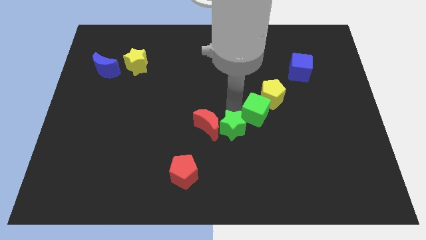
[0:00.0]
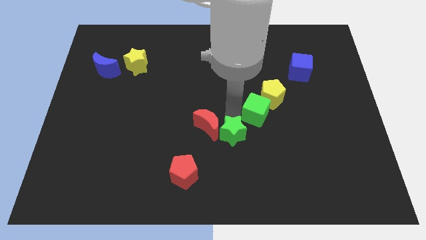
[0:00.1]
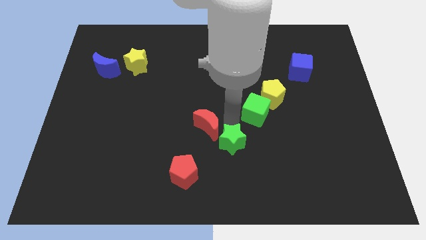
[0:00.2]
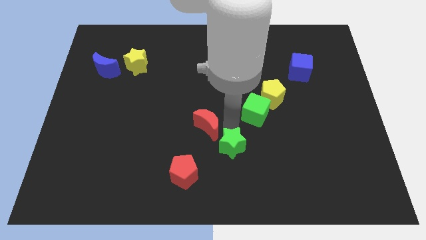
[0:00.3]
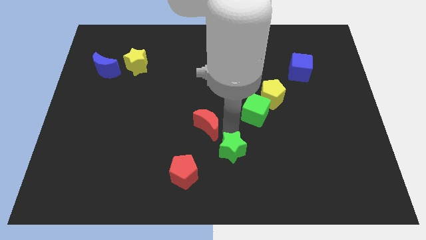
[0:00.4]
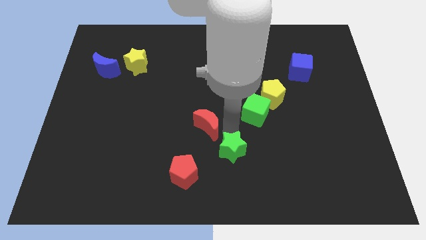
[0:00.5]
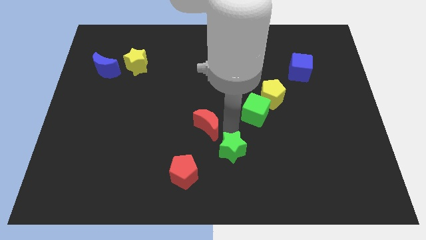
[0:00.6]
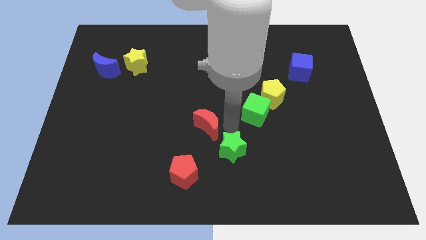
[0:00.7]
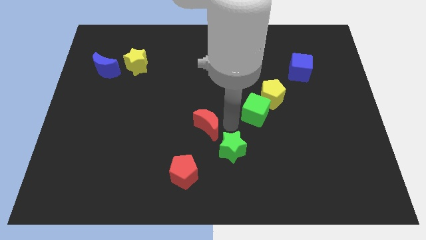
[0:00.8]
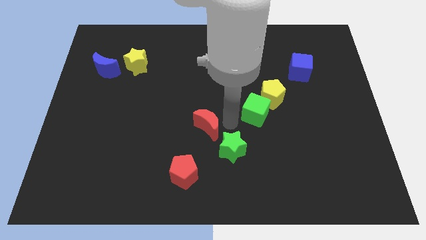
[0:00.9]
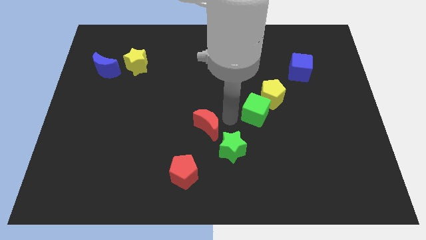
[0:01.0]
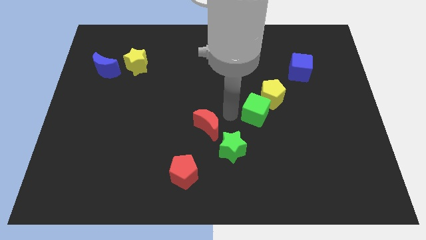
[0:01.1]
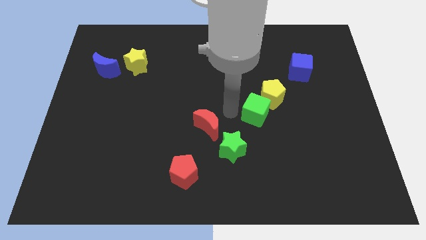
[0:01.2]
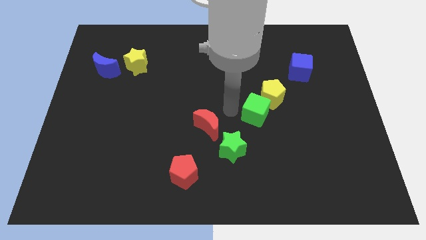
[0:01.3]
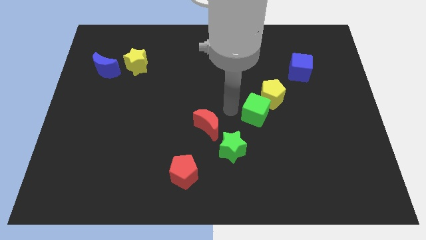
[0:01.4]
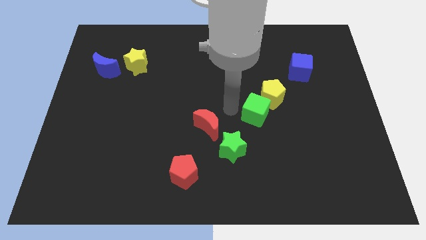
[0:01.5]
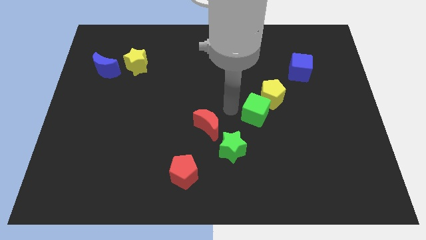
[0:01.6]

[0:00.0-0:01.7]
place the green star below the red moon

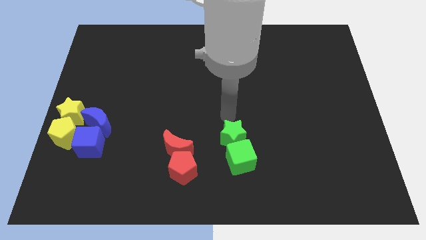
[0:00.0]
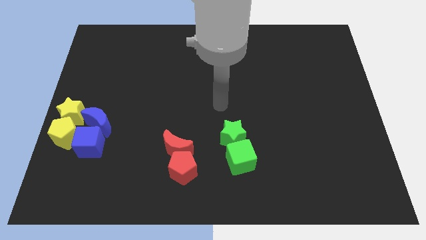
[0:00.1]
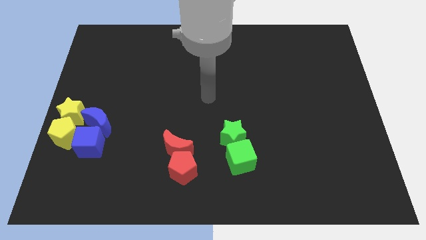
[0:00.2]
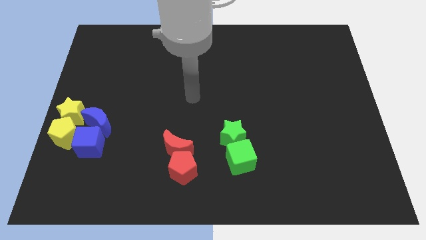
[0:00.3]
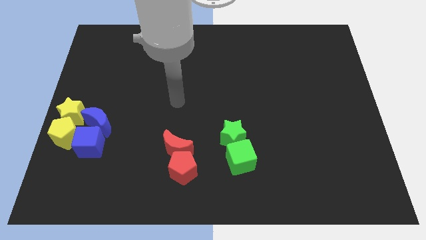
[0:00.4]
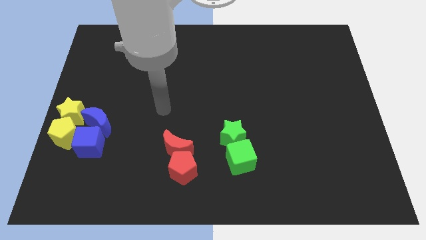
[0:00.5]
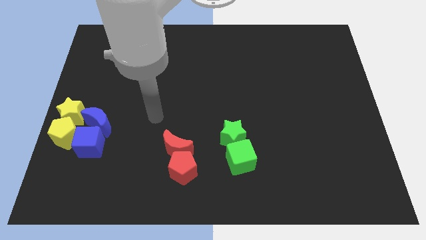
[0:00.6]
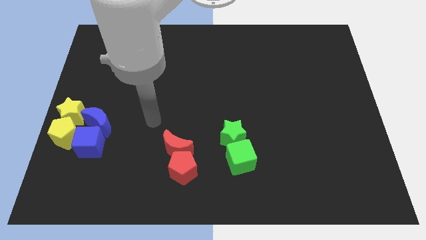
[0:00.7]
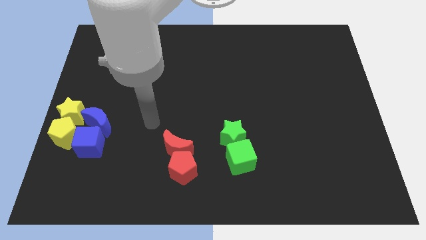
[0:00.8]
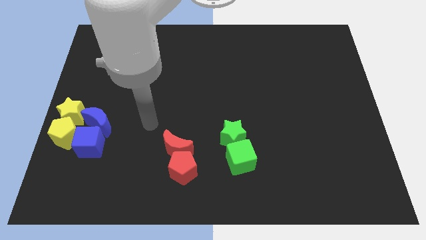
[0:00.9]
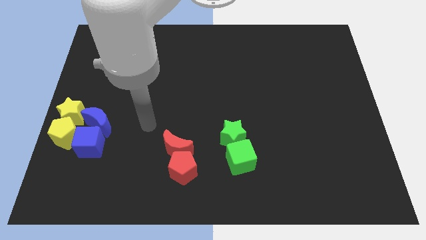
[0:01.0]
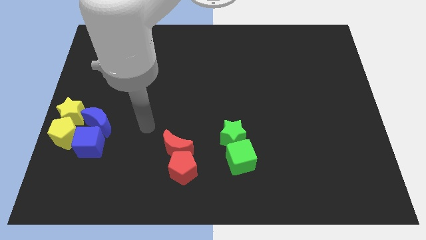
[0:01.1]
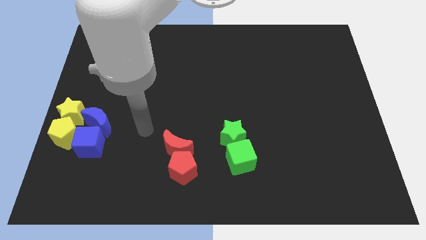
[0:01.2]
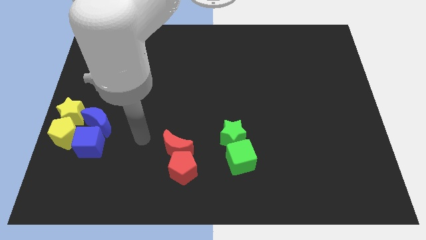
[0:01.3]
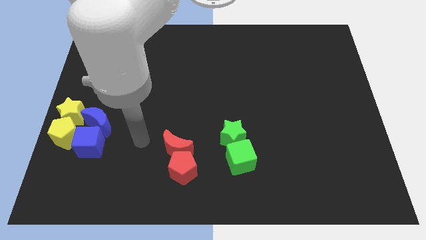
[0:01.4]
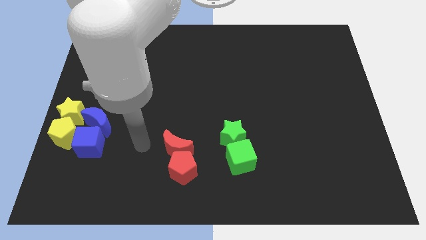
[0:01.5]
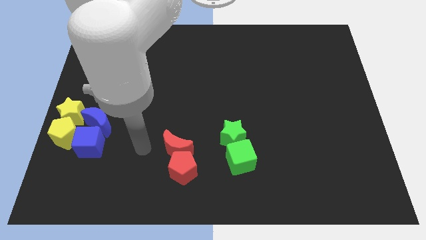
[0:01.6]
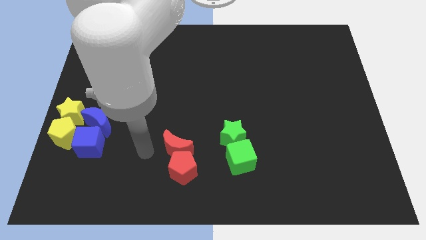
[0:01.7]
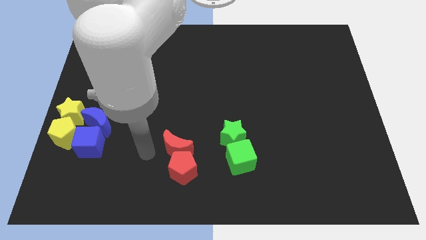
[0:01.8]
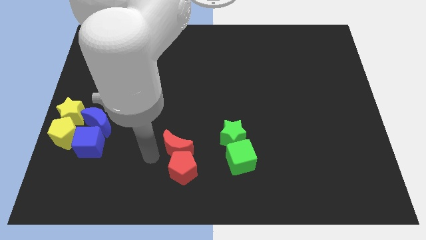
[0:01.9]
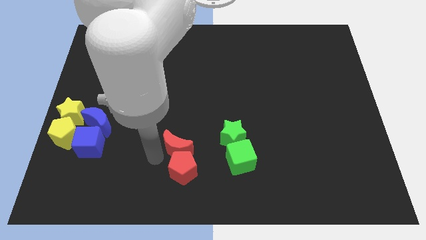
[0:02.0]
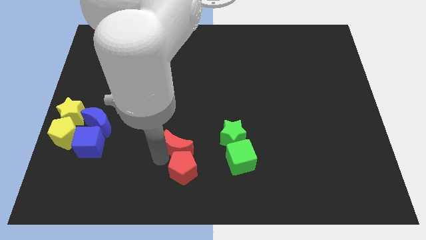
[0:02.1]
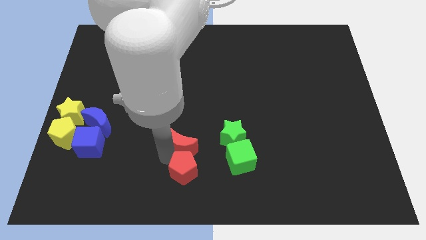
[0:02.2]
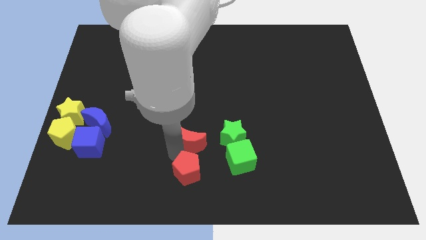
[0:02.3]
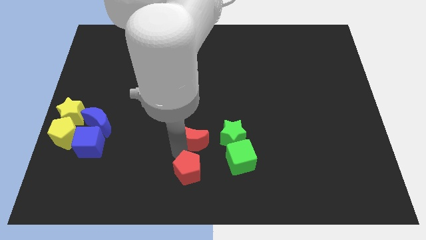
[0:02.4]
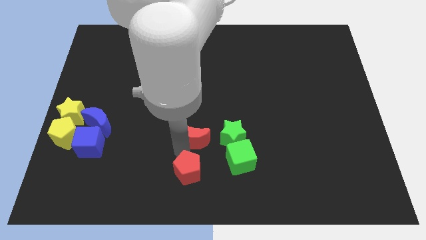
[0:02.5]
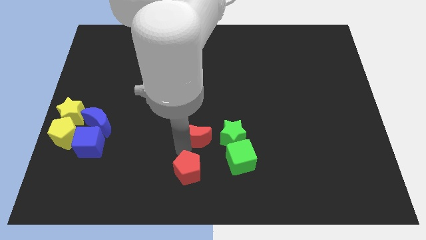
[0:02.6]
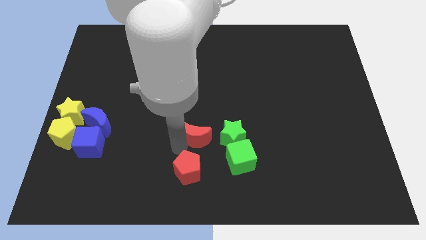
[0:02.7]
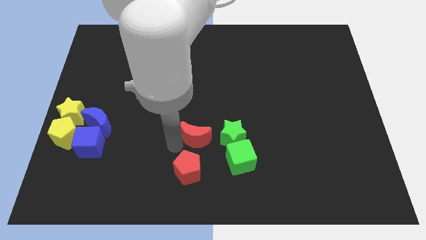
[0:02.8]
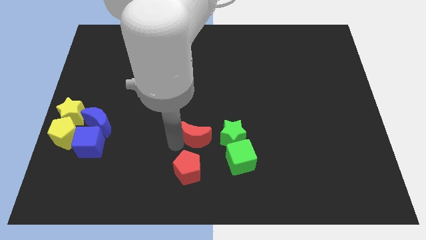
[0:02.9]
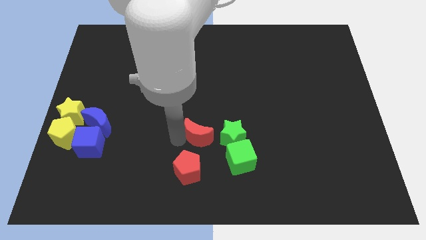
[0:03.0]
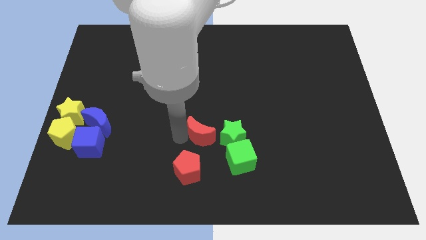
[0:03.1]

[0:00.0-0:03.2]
push the red crescent into the green star

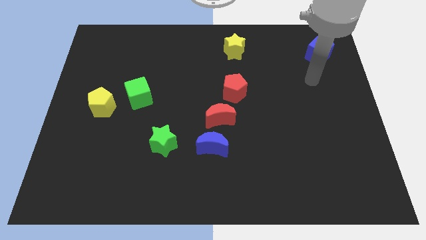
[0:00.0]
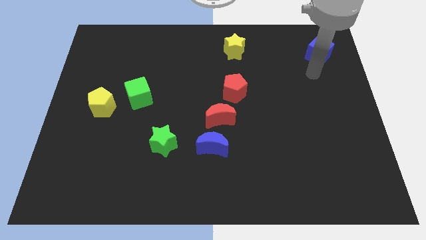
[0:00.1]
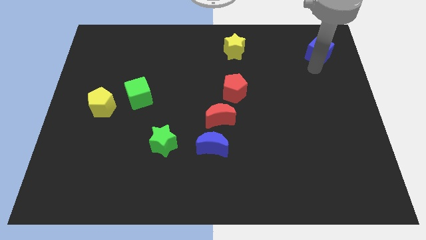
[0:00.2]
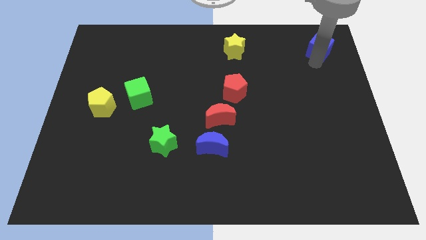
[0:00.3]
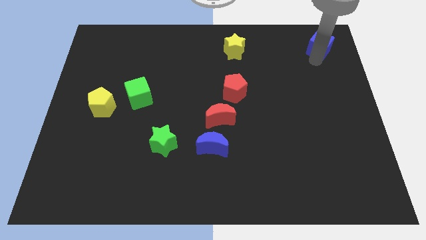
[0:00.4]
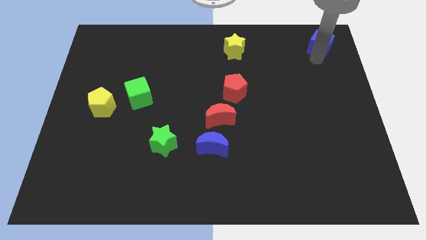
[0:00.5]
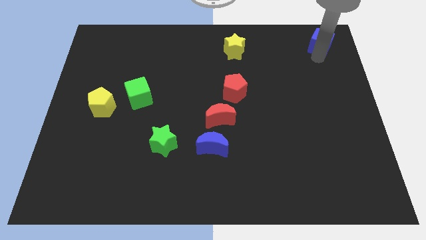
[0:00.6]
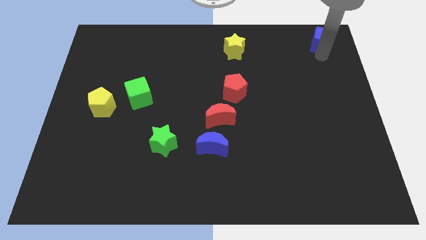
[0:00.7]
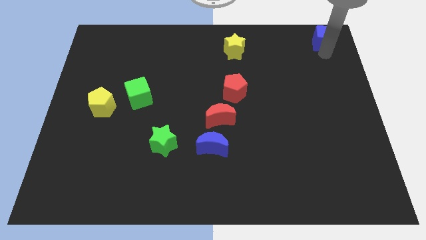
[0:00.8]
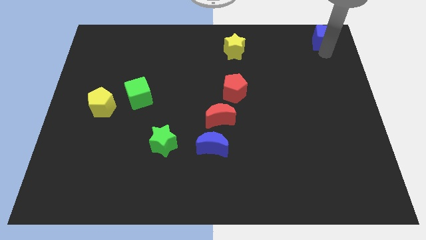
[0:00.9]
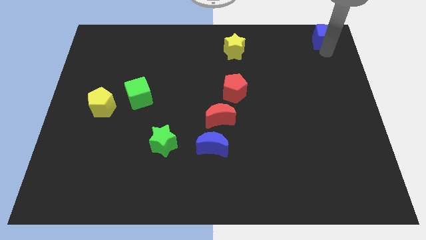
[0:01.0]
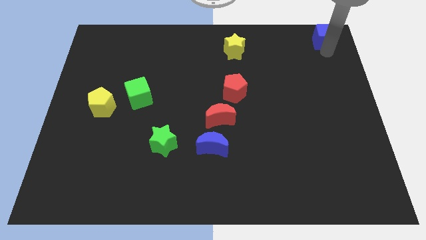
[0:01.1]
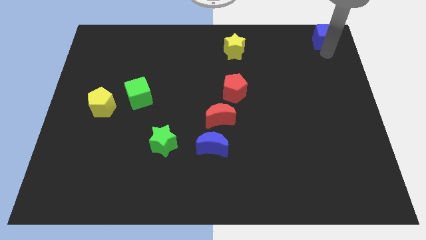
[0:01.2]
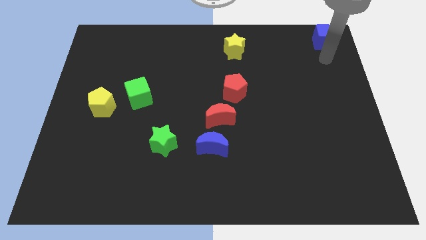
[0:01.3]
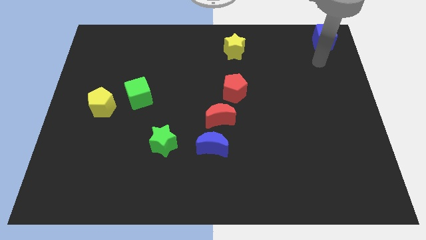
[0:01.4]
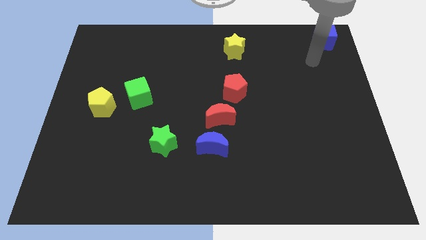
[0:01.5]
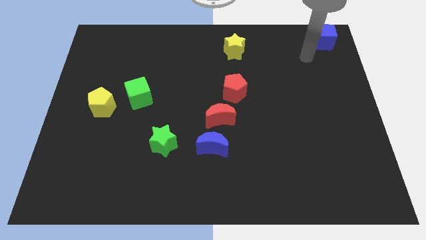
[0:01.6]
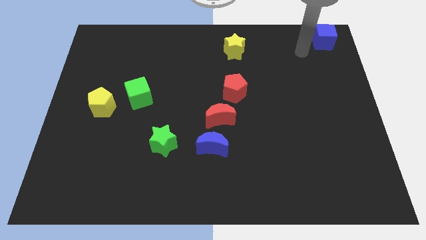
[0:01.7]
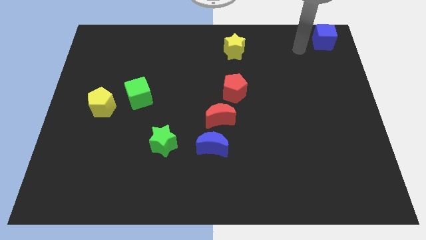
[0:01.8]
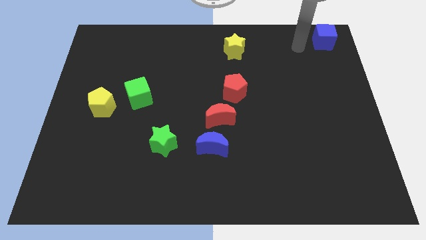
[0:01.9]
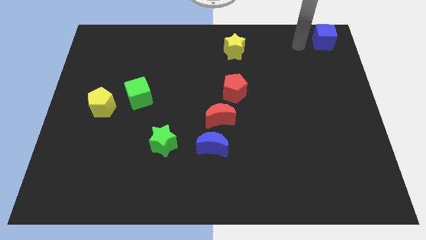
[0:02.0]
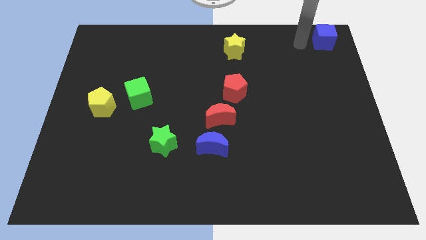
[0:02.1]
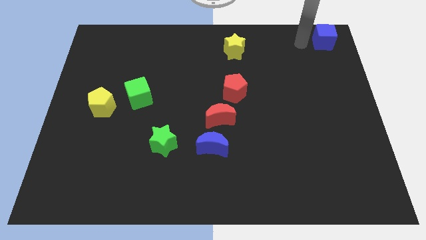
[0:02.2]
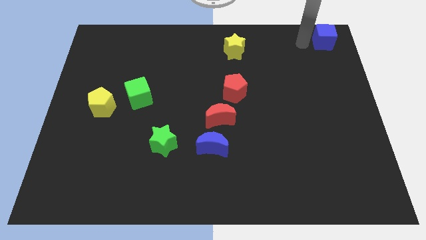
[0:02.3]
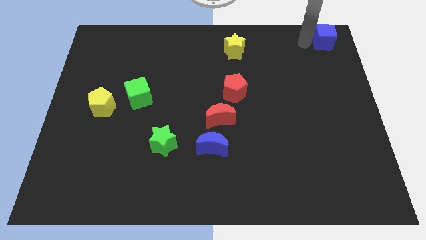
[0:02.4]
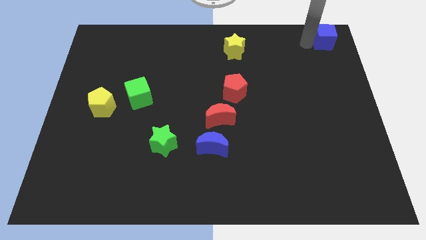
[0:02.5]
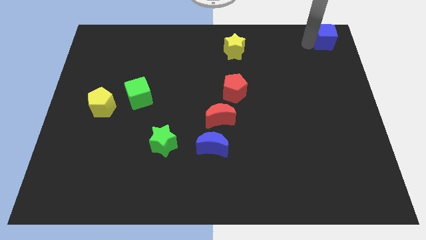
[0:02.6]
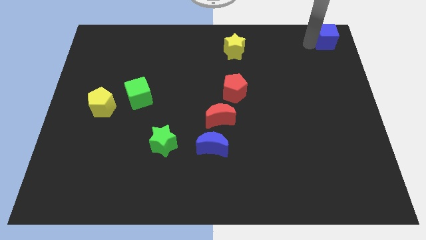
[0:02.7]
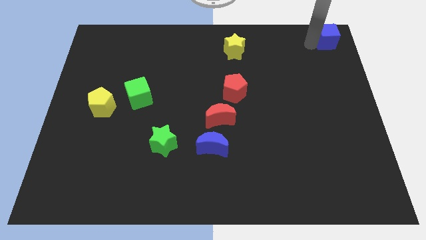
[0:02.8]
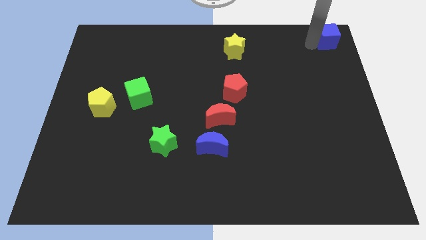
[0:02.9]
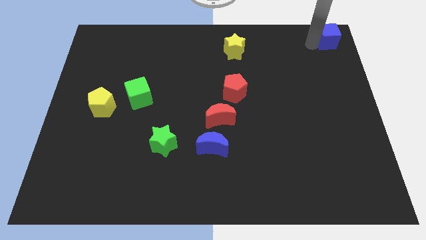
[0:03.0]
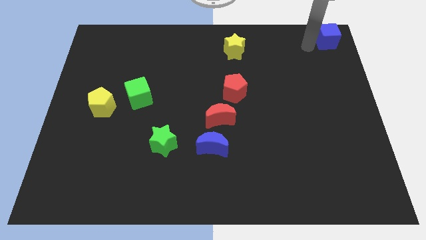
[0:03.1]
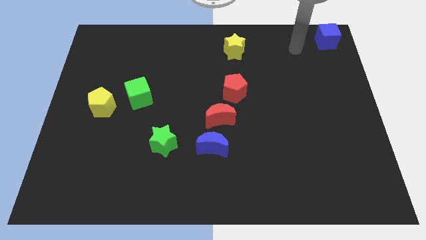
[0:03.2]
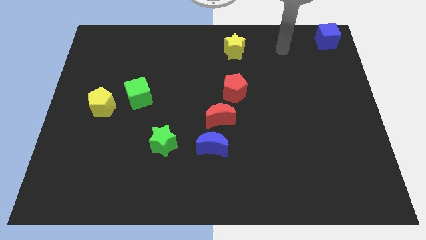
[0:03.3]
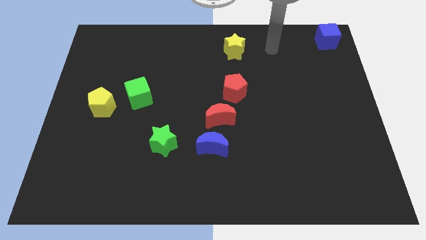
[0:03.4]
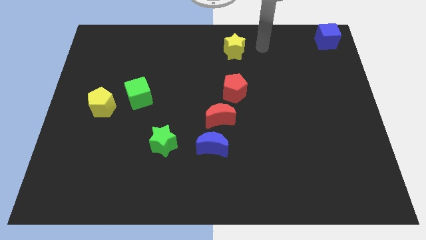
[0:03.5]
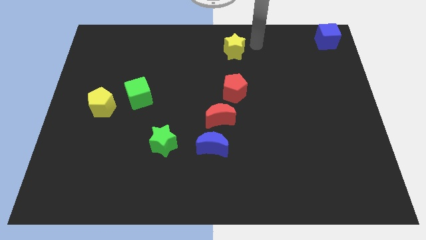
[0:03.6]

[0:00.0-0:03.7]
place the blue cube at the top right corner

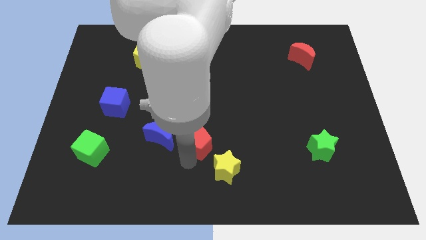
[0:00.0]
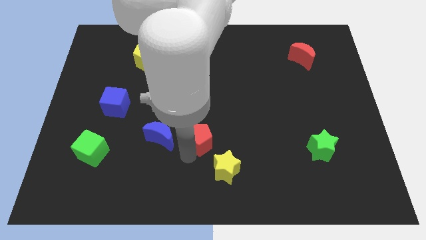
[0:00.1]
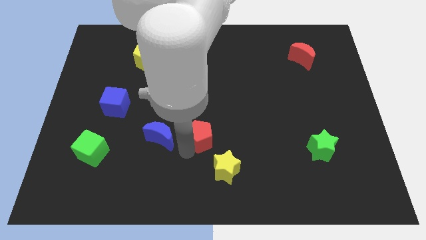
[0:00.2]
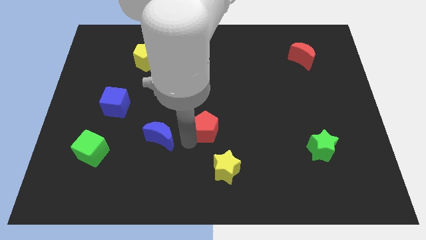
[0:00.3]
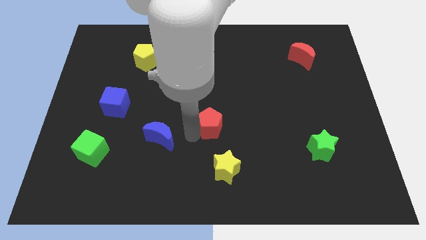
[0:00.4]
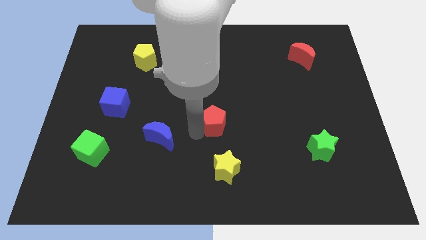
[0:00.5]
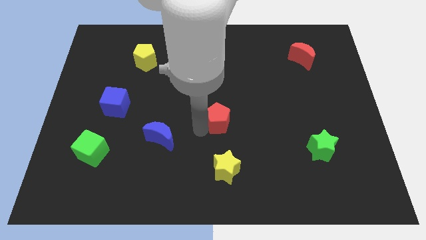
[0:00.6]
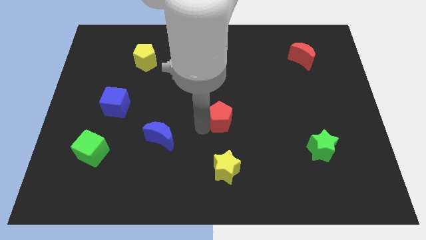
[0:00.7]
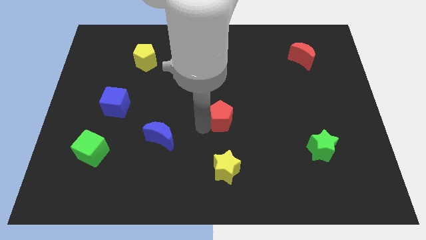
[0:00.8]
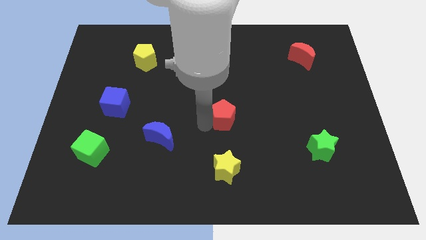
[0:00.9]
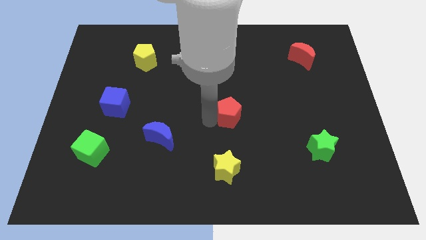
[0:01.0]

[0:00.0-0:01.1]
slide red pentagon at center
